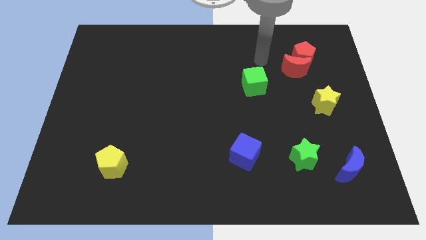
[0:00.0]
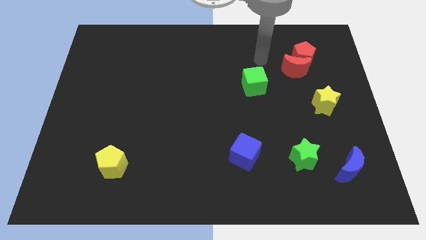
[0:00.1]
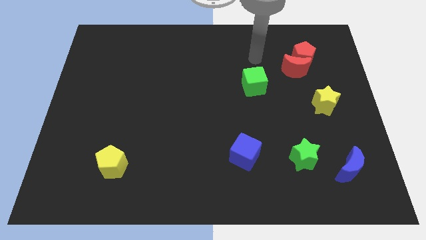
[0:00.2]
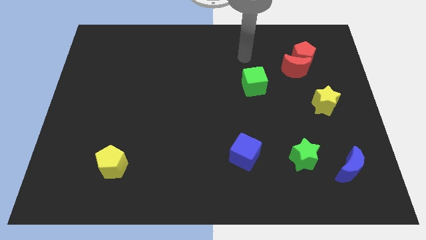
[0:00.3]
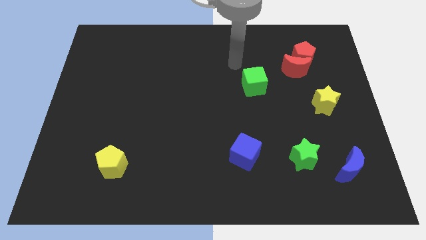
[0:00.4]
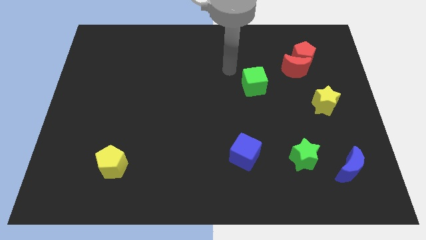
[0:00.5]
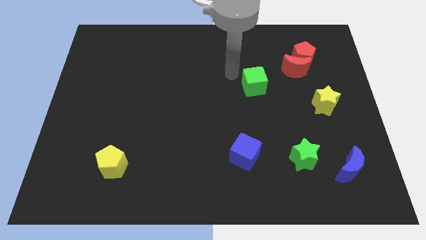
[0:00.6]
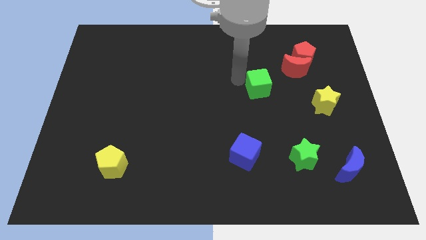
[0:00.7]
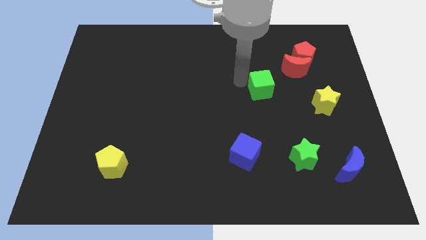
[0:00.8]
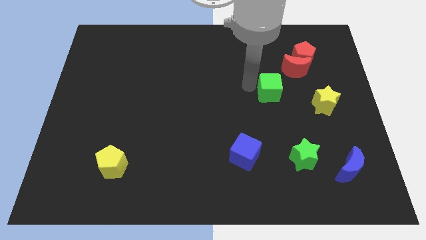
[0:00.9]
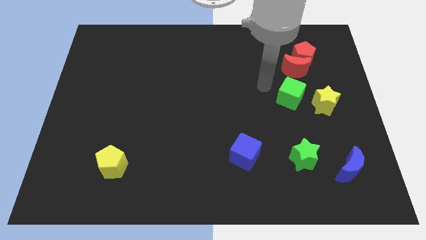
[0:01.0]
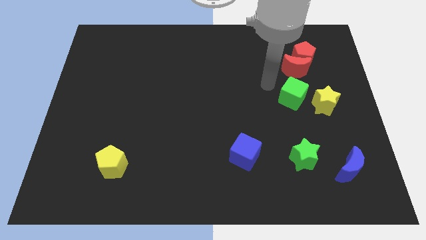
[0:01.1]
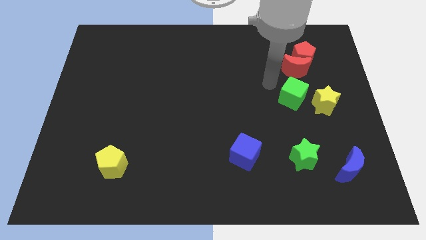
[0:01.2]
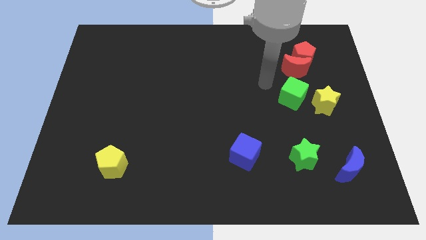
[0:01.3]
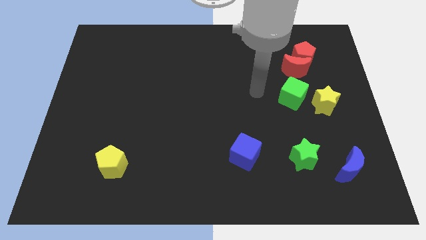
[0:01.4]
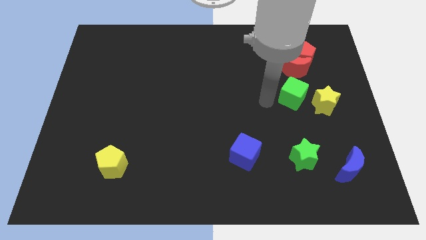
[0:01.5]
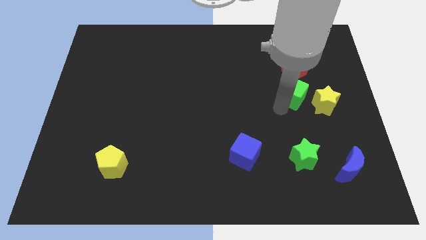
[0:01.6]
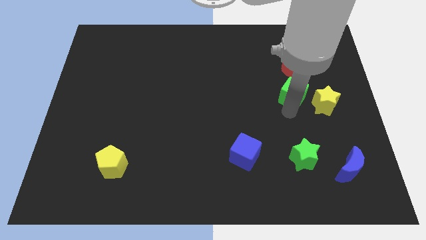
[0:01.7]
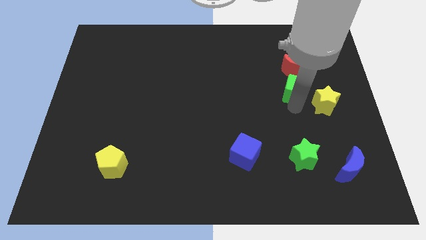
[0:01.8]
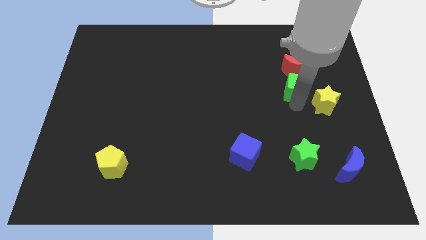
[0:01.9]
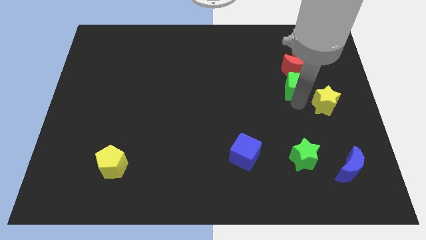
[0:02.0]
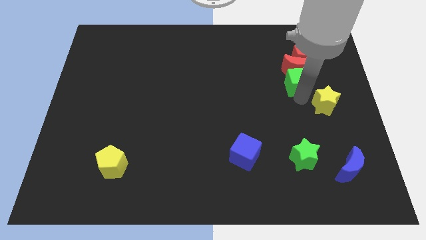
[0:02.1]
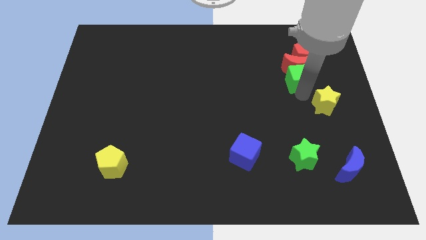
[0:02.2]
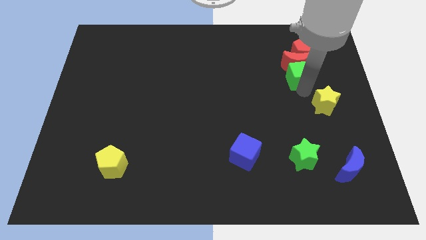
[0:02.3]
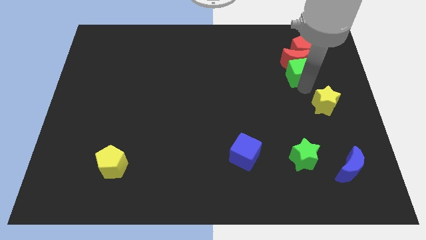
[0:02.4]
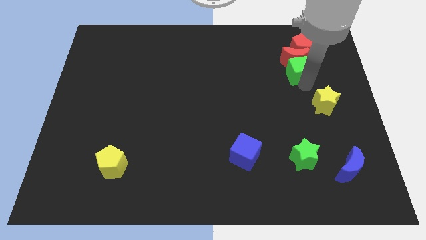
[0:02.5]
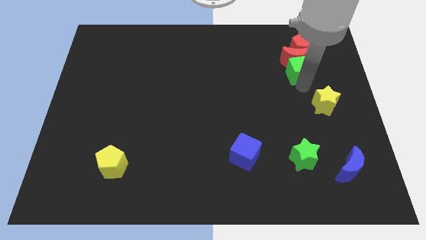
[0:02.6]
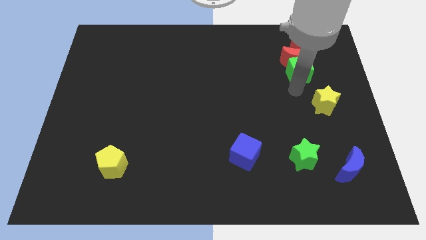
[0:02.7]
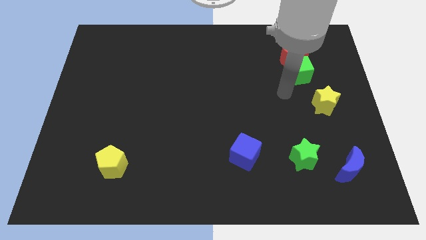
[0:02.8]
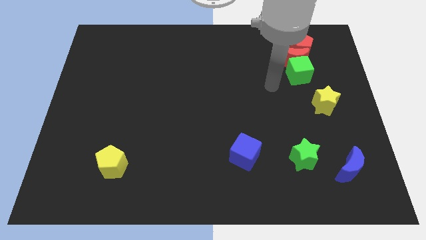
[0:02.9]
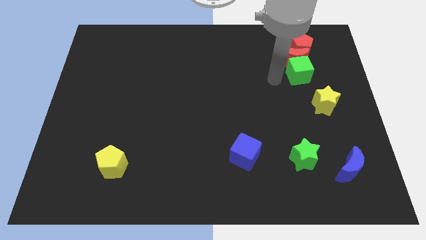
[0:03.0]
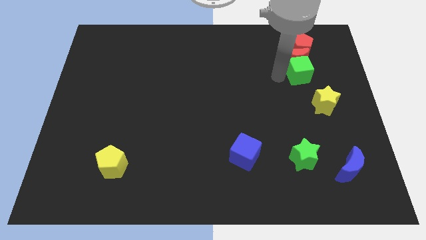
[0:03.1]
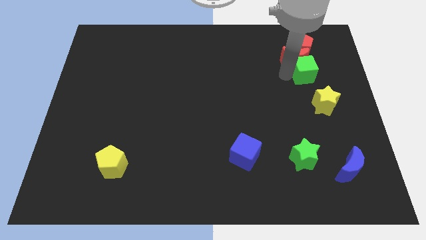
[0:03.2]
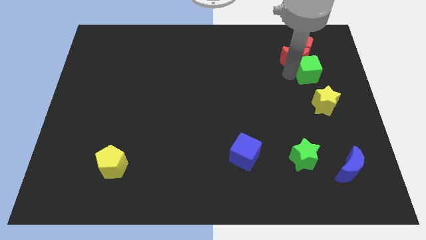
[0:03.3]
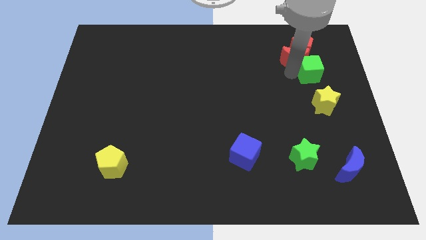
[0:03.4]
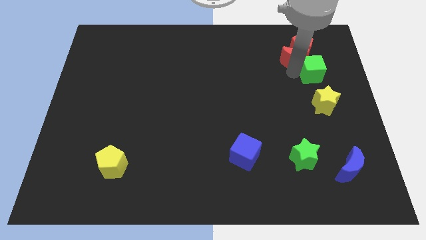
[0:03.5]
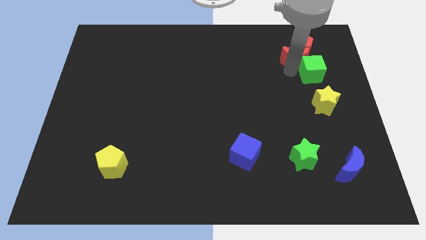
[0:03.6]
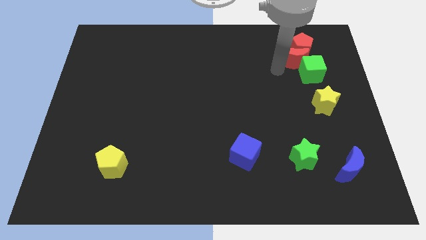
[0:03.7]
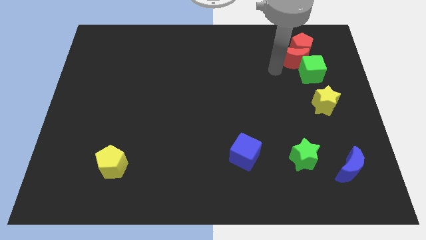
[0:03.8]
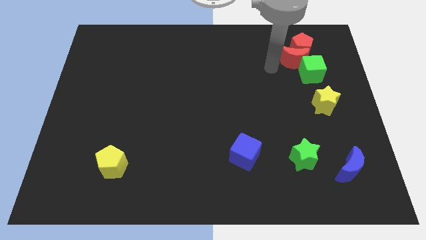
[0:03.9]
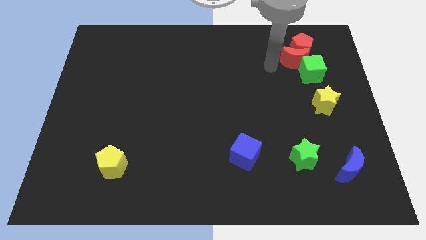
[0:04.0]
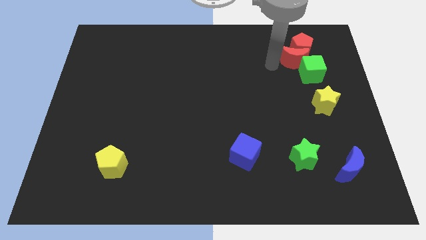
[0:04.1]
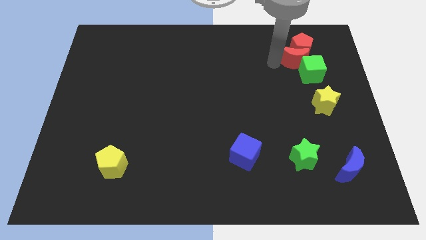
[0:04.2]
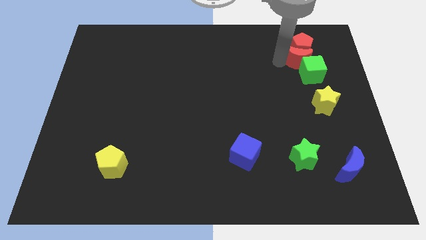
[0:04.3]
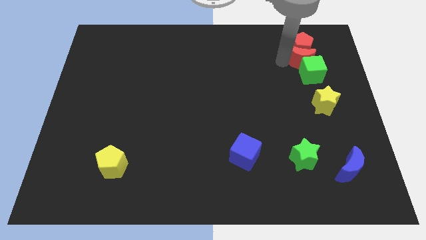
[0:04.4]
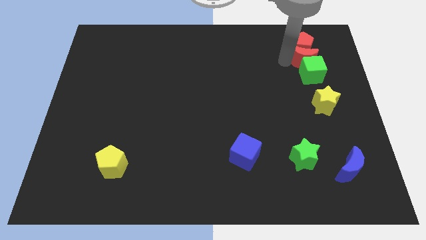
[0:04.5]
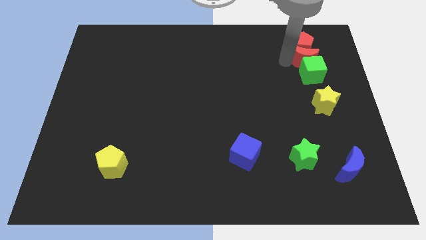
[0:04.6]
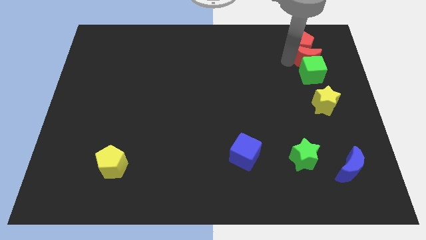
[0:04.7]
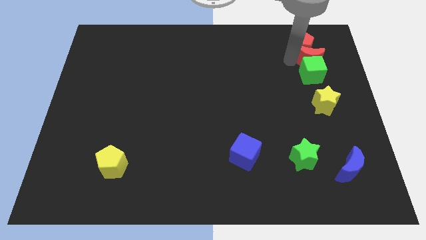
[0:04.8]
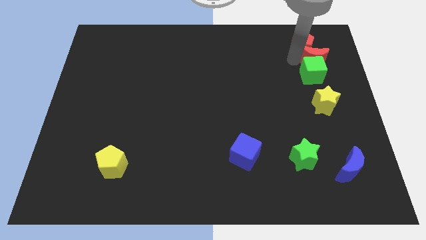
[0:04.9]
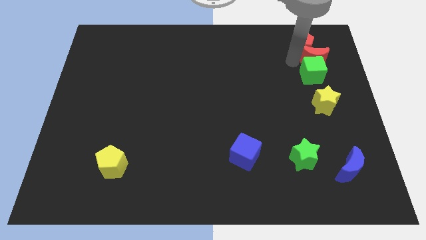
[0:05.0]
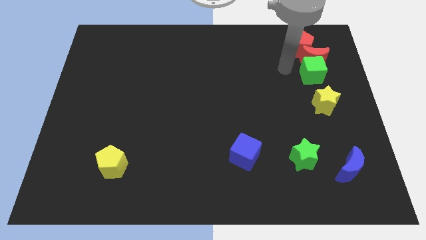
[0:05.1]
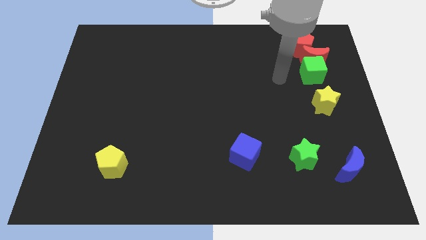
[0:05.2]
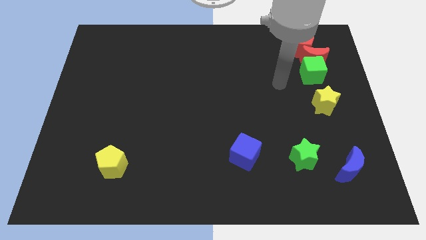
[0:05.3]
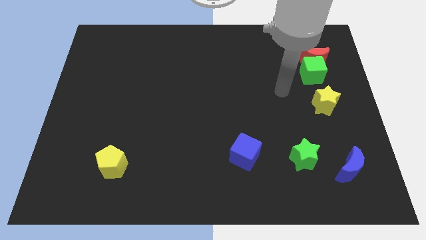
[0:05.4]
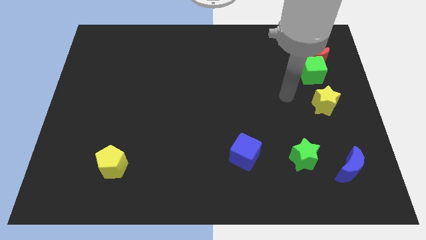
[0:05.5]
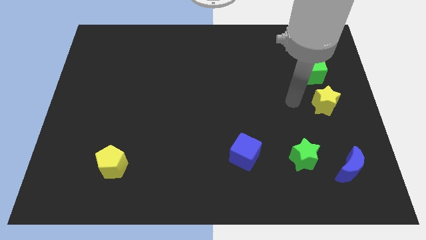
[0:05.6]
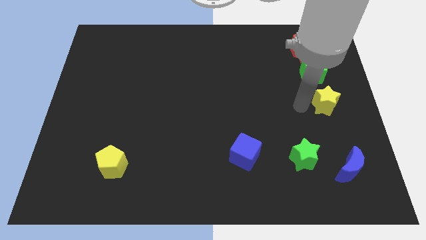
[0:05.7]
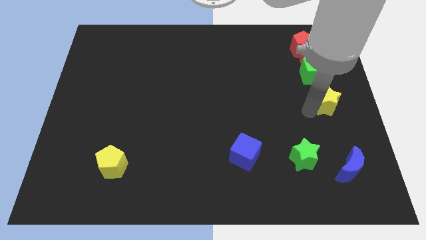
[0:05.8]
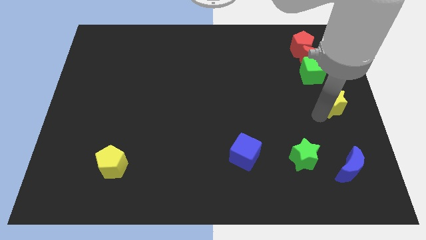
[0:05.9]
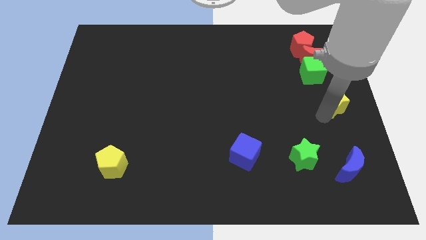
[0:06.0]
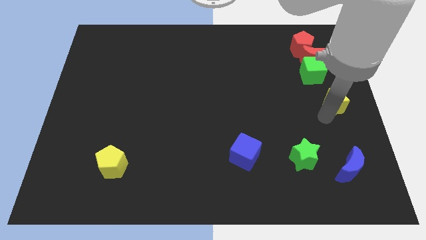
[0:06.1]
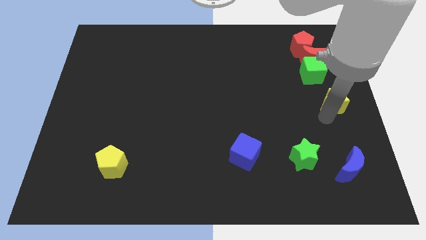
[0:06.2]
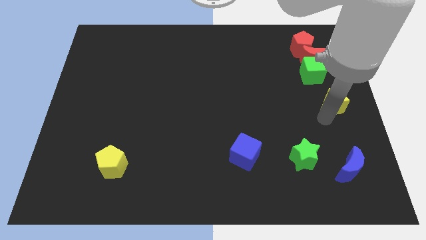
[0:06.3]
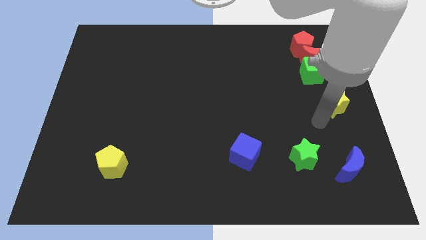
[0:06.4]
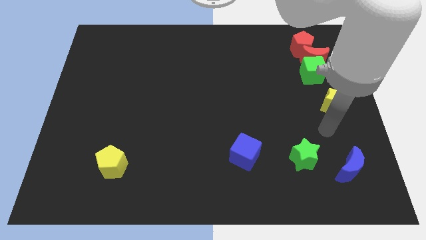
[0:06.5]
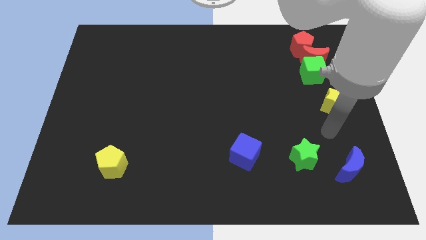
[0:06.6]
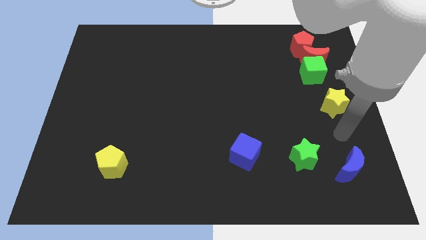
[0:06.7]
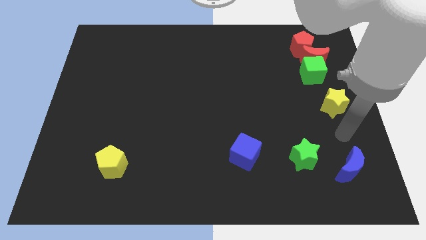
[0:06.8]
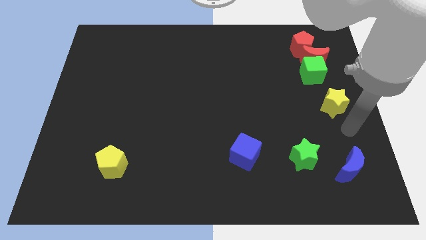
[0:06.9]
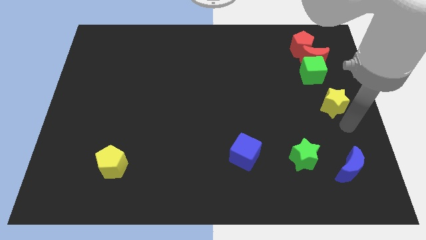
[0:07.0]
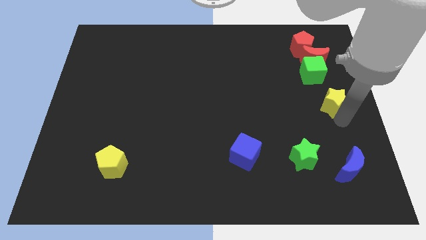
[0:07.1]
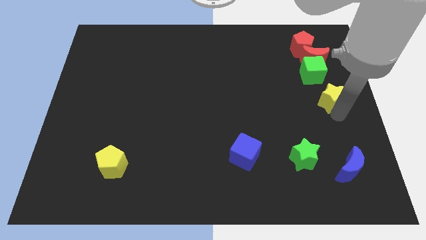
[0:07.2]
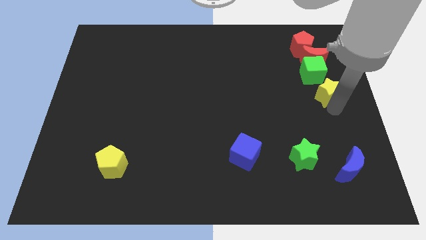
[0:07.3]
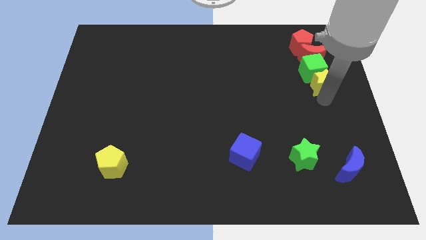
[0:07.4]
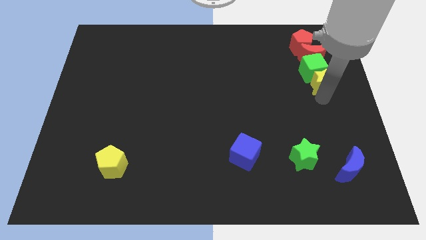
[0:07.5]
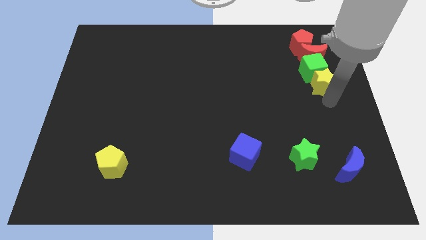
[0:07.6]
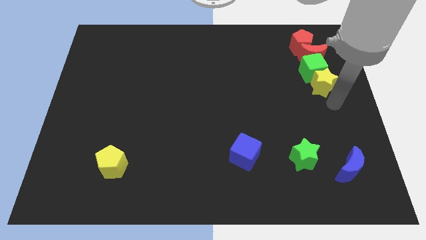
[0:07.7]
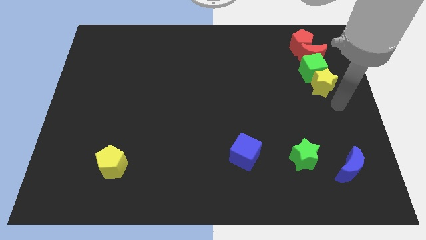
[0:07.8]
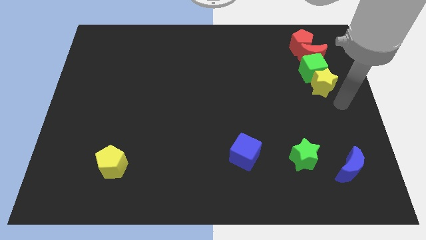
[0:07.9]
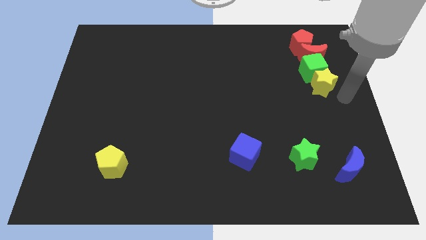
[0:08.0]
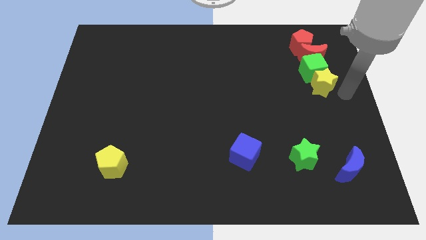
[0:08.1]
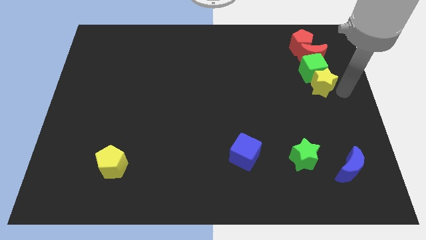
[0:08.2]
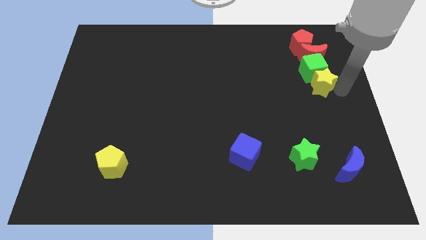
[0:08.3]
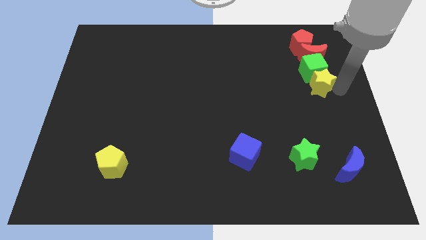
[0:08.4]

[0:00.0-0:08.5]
form a vertical line with green cube and yellow star below the red moon

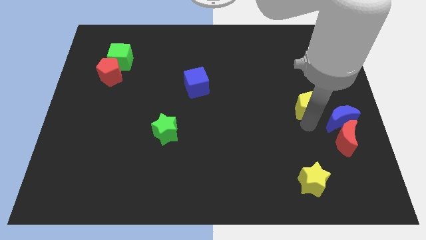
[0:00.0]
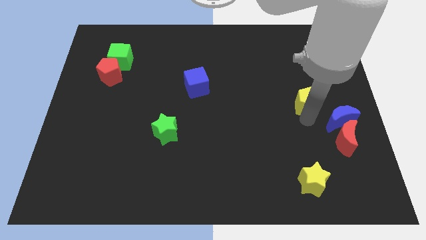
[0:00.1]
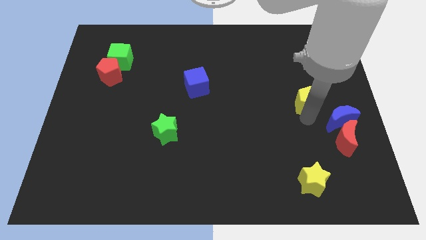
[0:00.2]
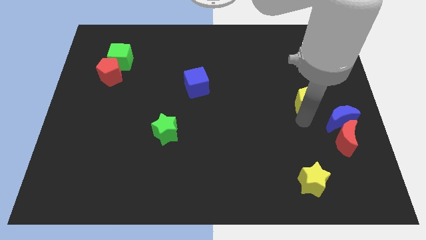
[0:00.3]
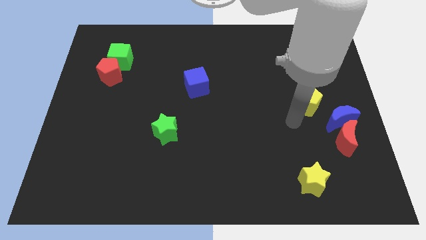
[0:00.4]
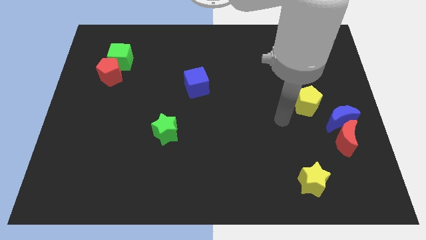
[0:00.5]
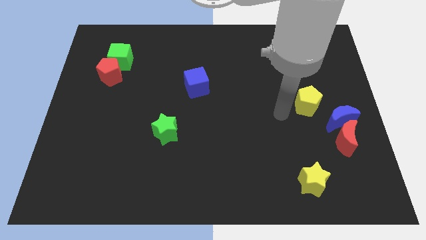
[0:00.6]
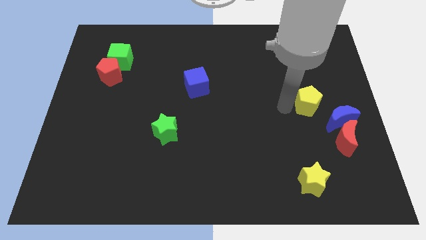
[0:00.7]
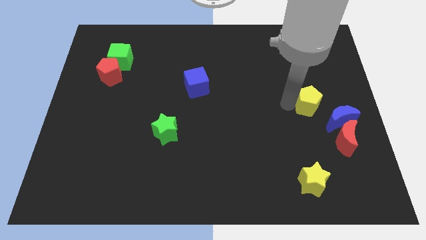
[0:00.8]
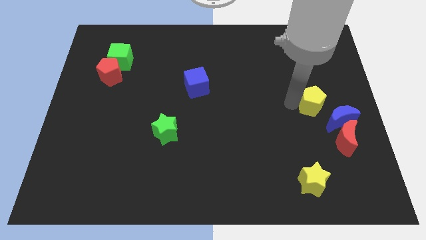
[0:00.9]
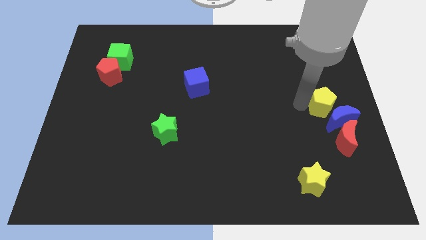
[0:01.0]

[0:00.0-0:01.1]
move yellow pentagon slightly upwards
